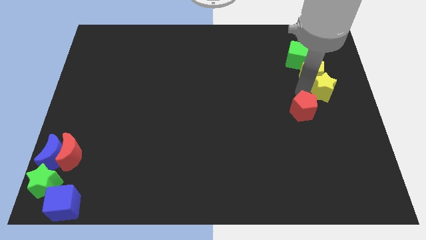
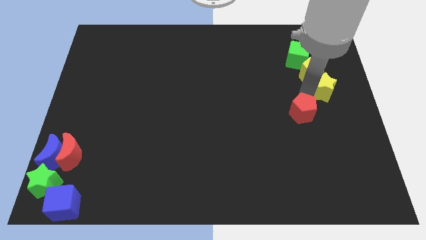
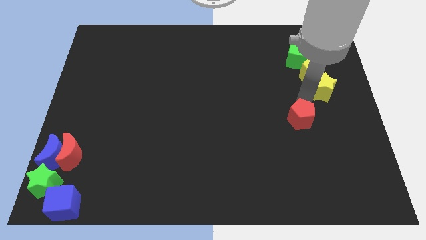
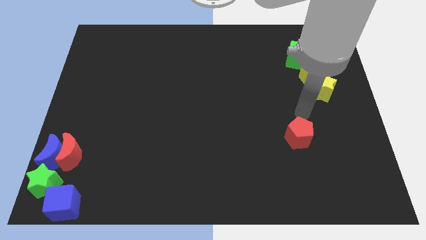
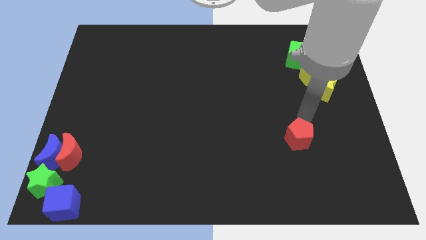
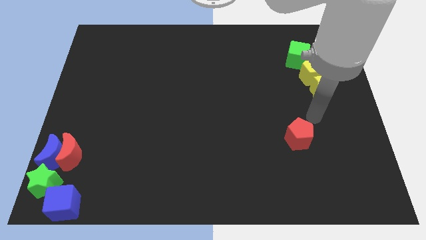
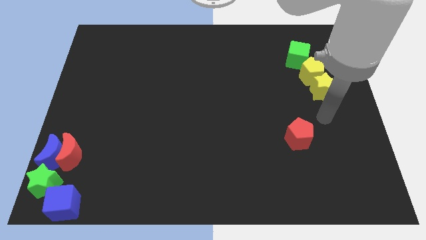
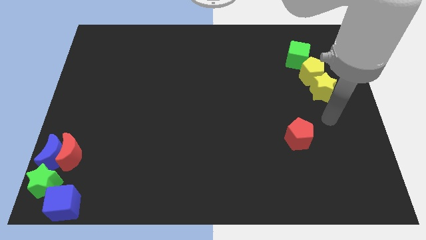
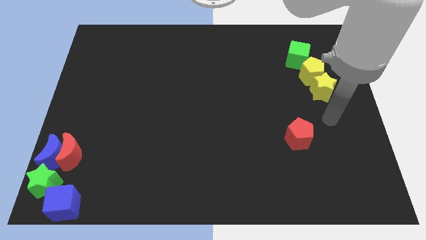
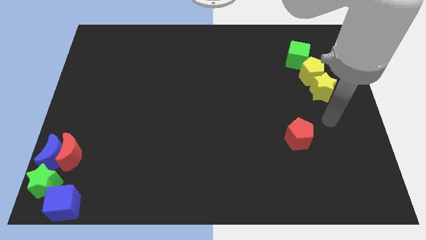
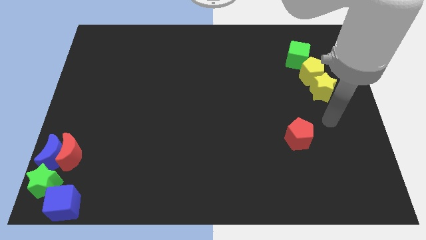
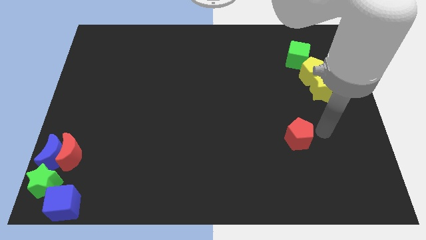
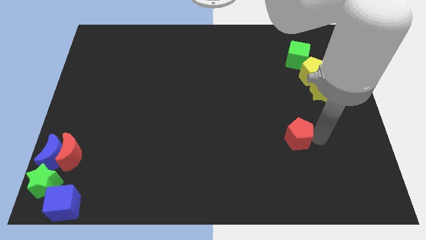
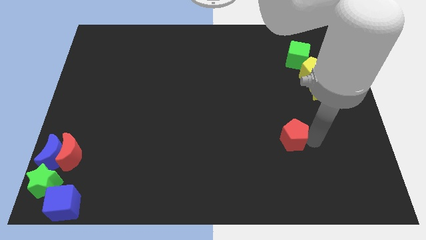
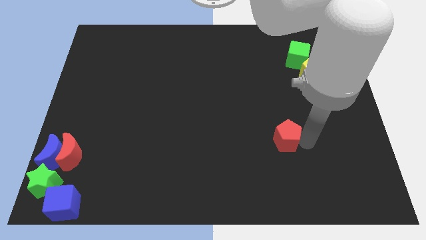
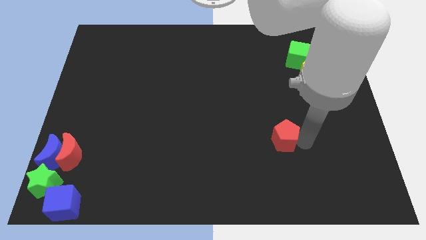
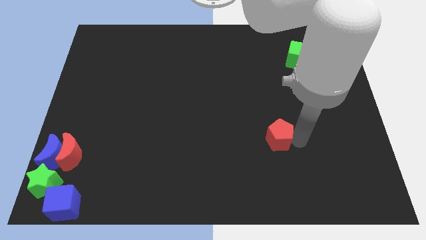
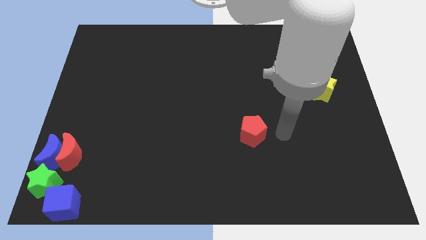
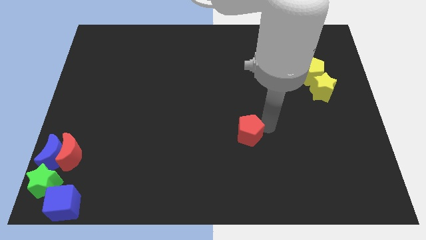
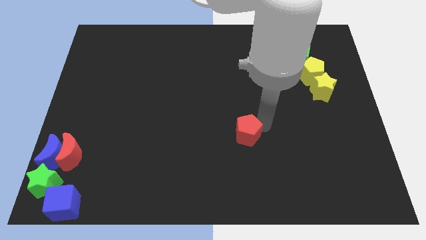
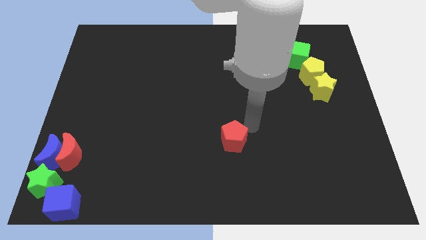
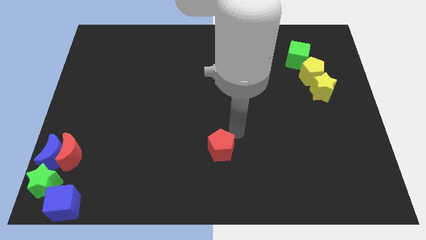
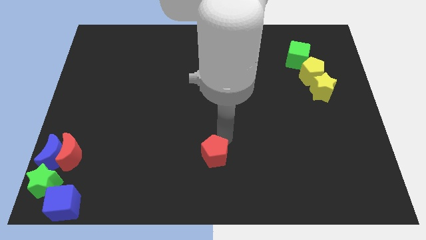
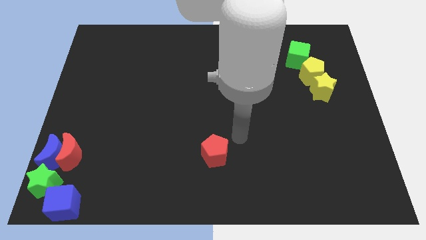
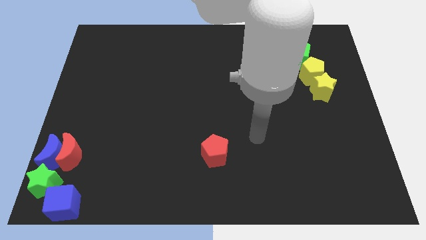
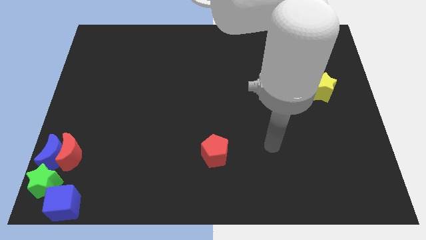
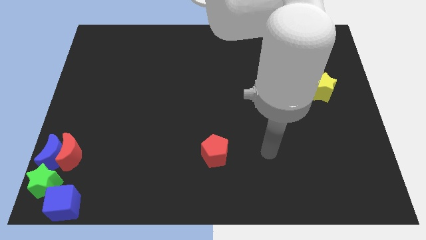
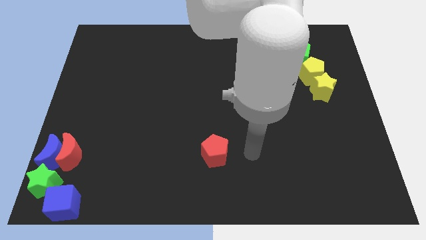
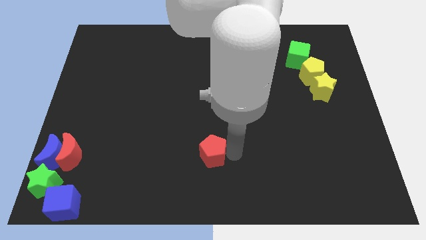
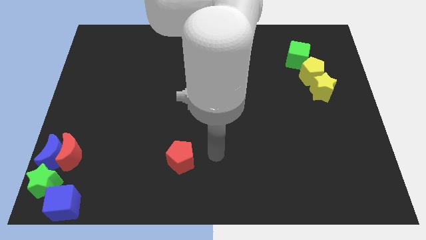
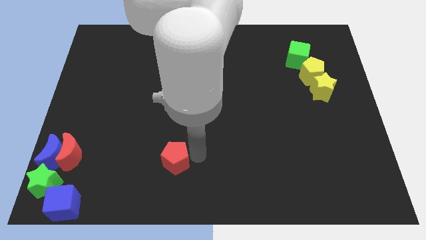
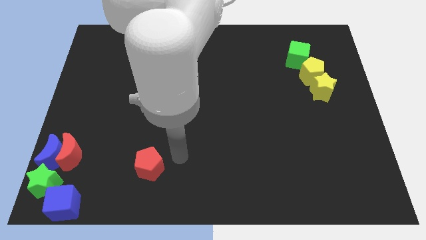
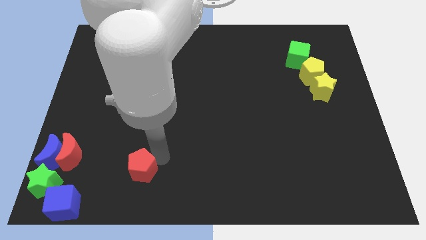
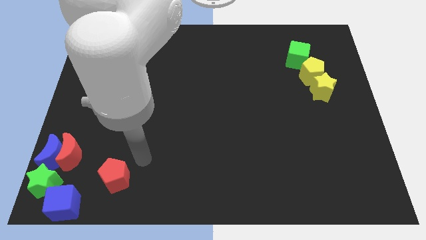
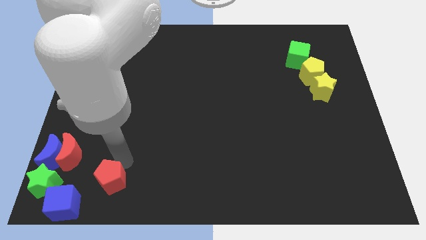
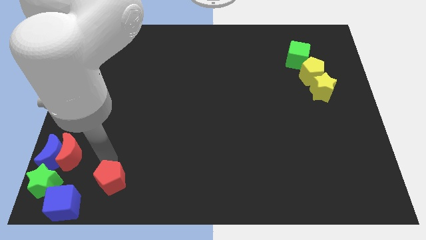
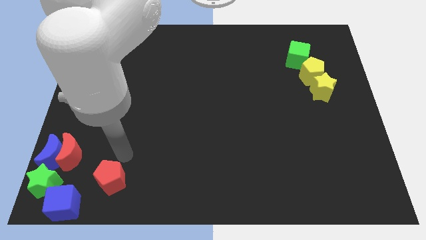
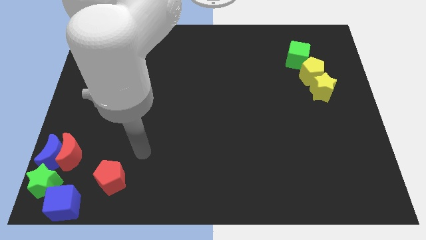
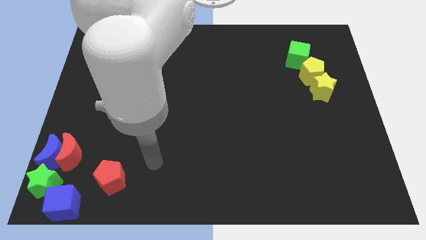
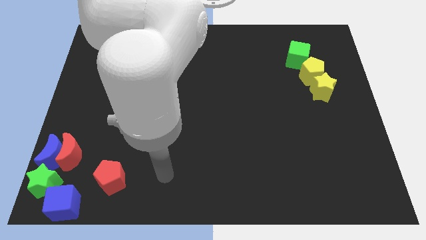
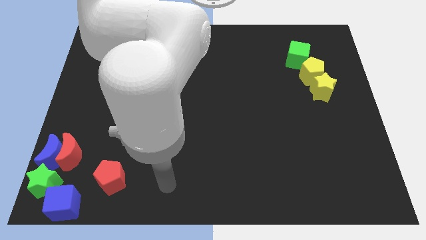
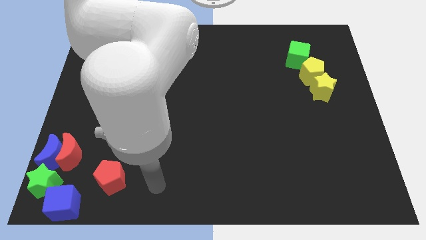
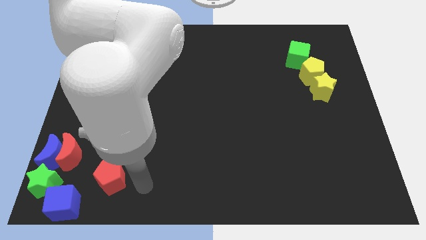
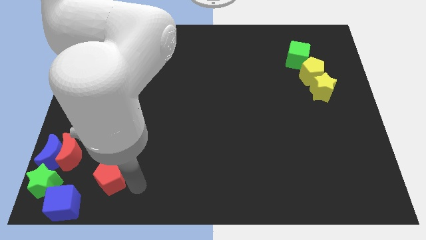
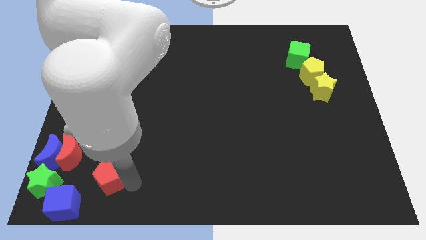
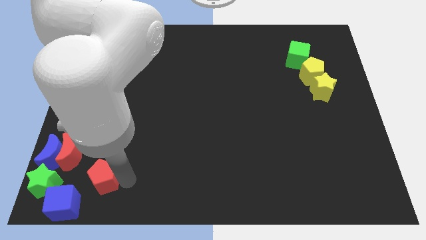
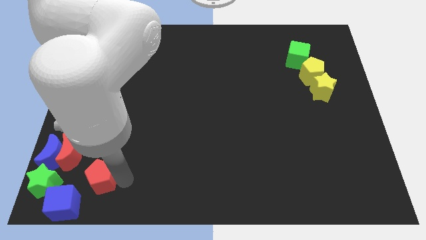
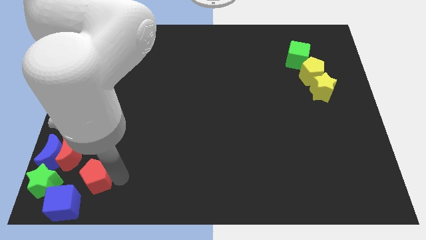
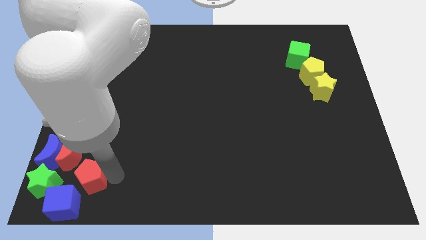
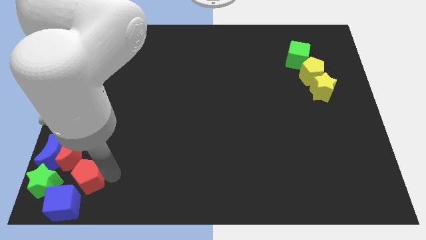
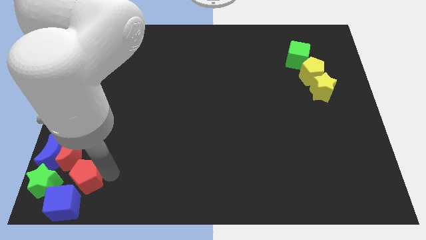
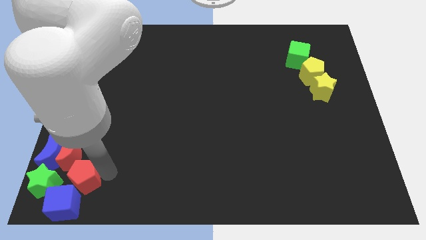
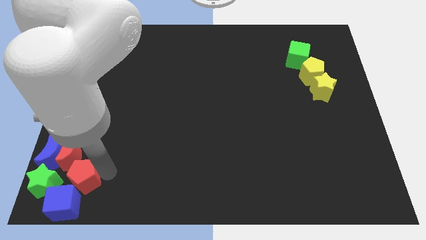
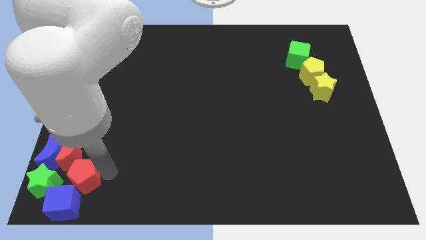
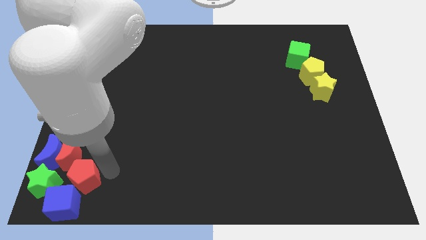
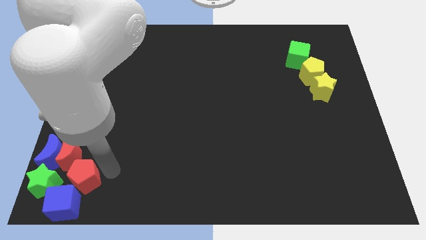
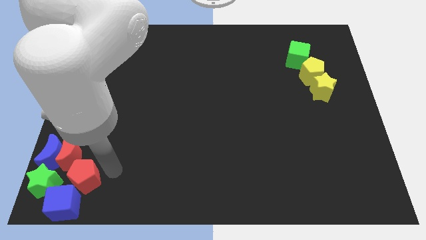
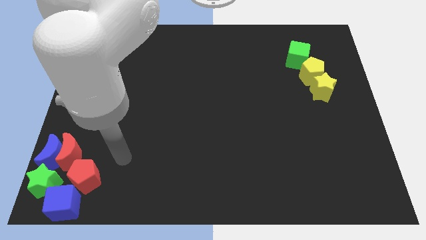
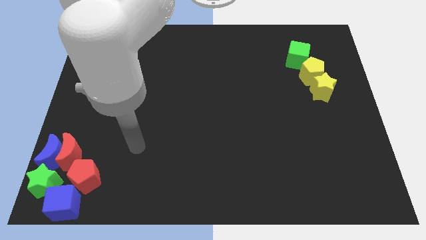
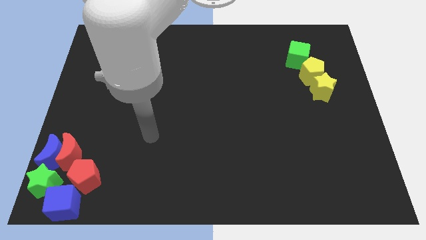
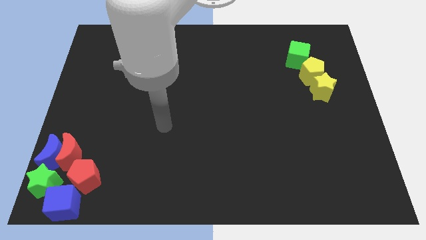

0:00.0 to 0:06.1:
push the red pentagon into the blue cube

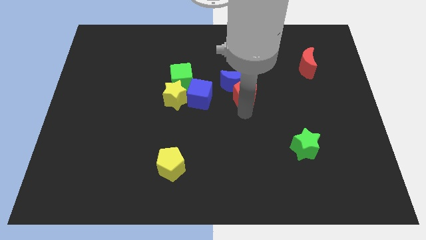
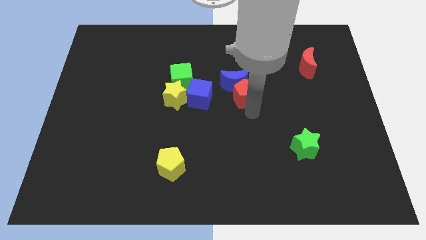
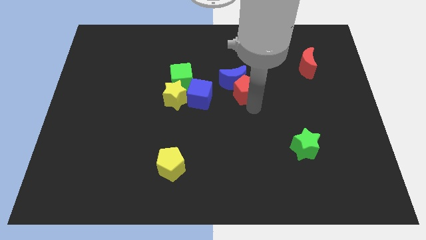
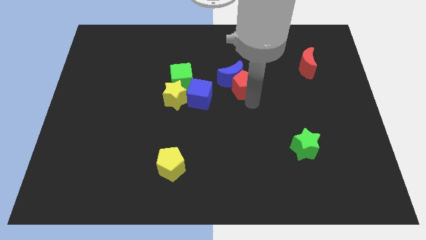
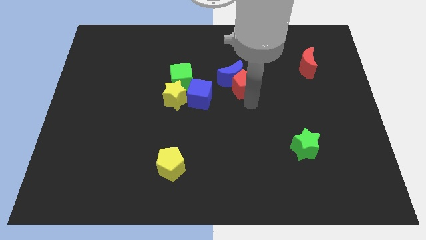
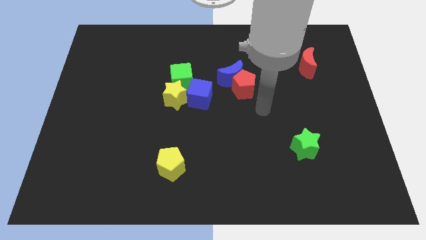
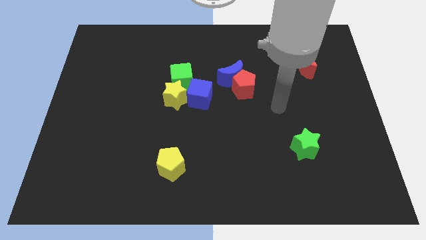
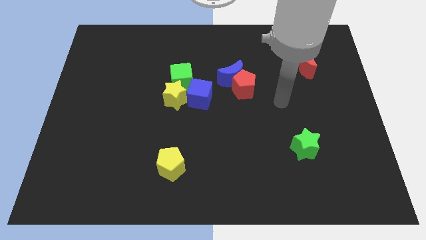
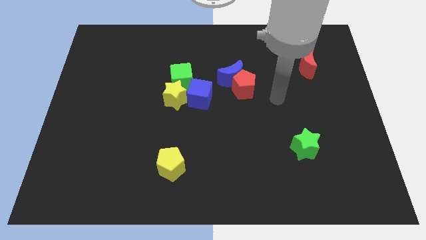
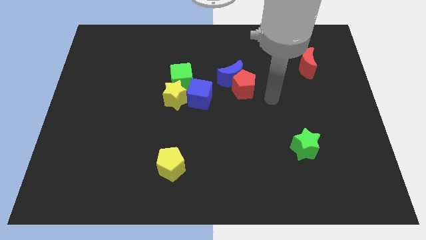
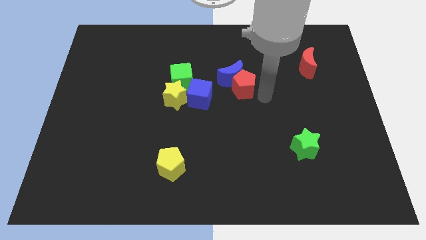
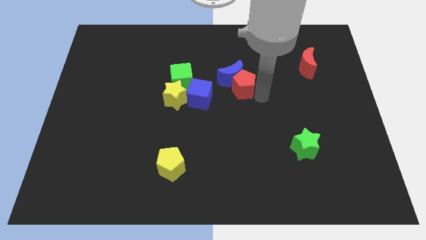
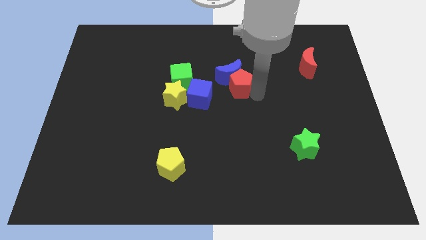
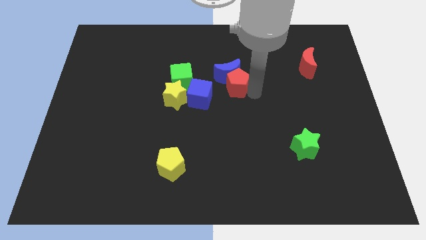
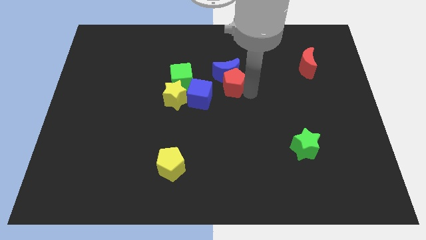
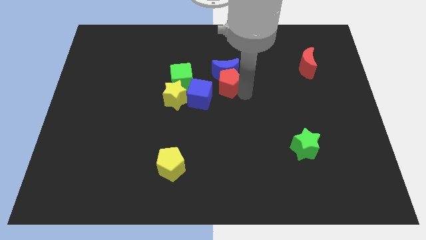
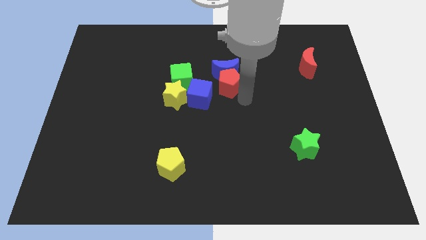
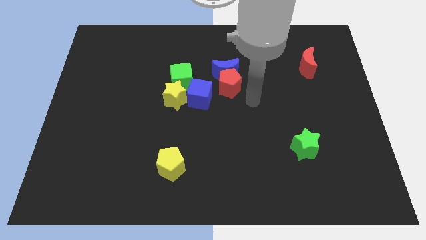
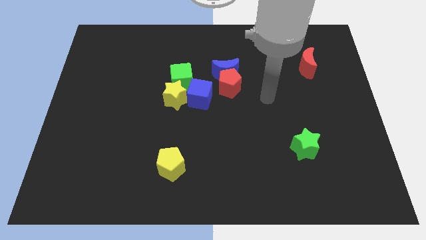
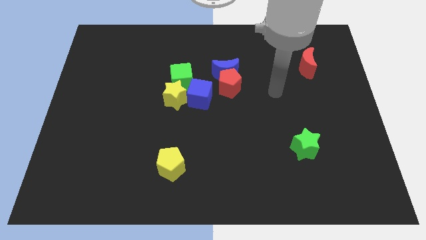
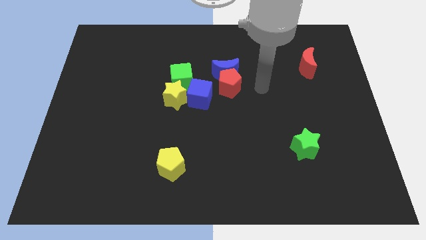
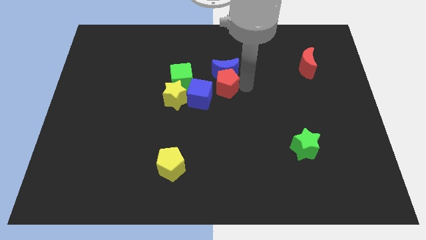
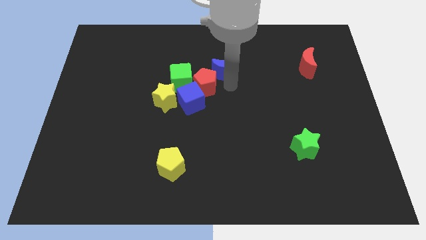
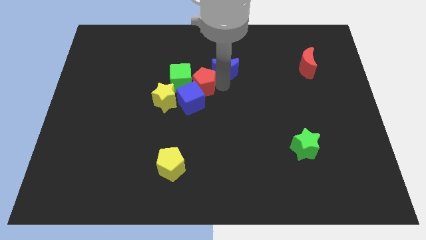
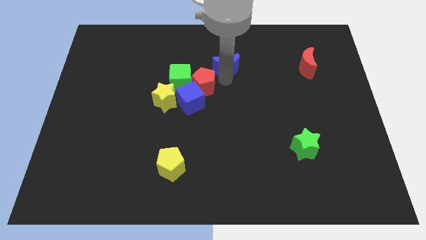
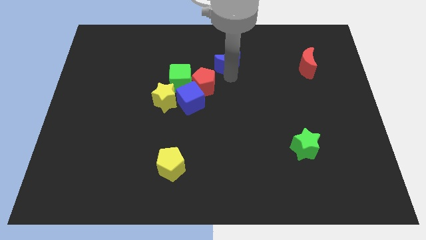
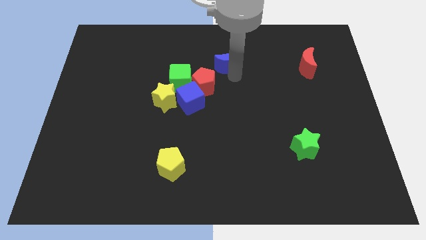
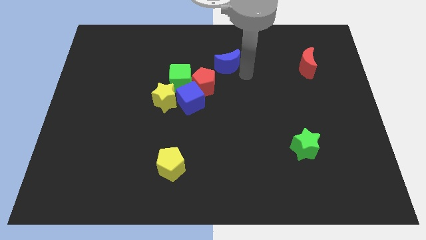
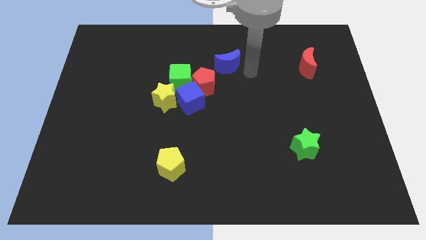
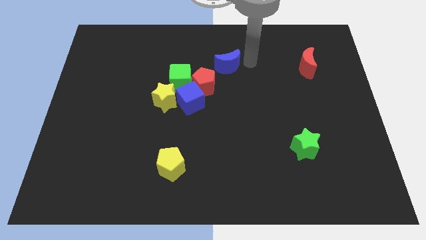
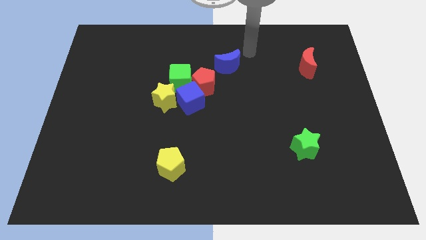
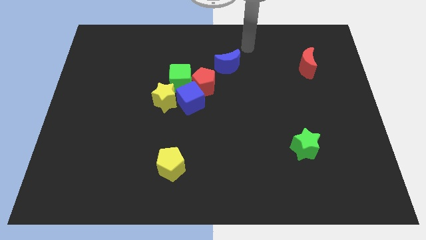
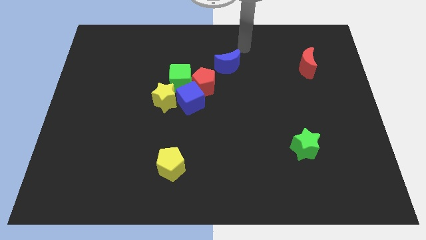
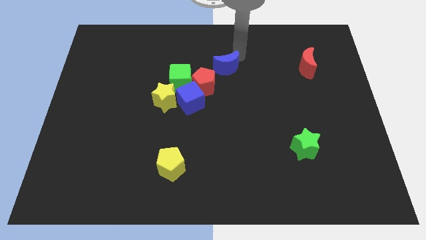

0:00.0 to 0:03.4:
push the red pentagon into green cube
